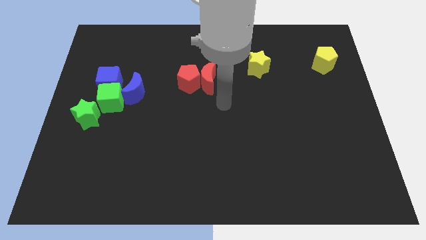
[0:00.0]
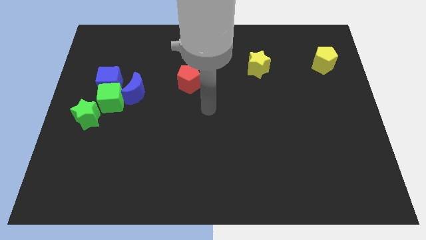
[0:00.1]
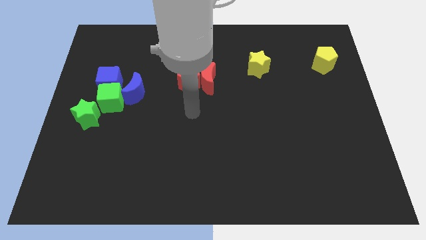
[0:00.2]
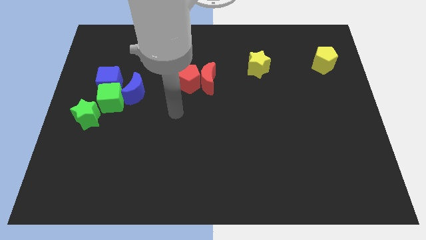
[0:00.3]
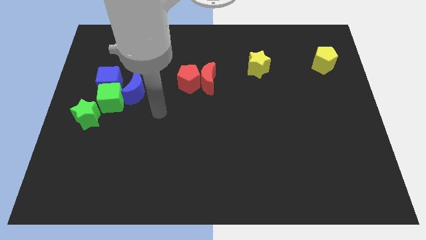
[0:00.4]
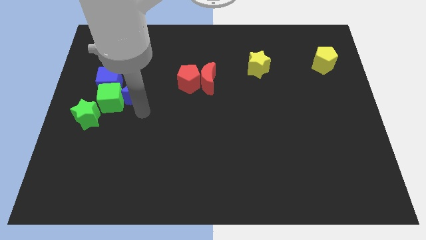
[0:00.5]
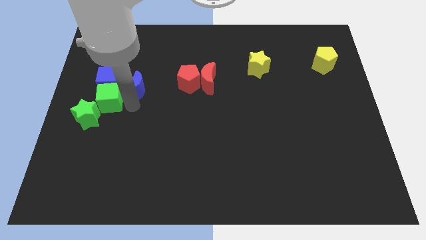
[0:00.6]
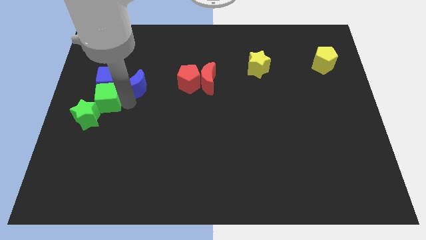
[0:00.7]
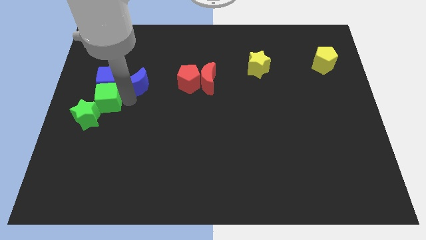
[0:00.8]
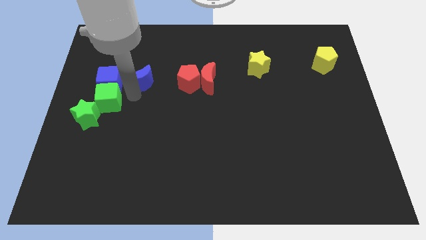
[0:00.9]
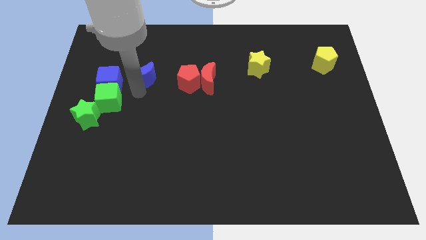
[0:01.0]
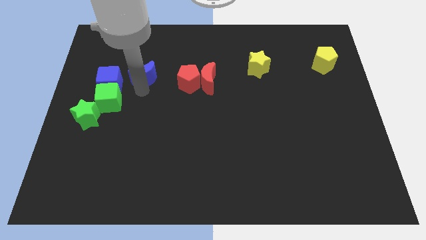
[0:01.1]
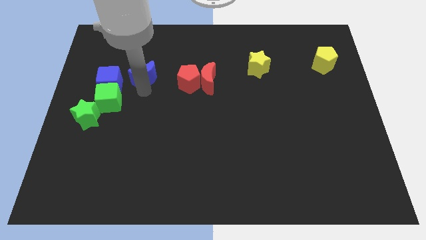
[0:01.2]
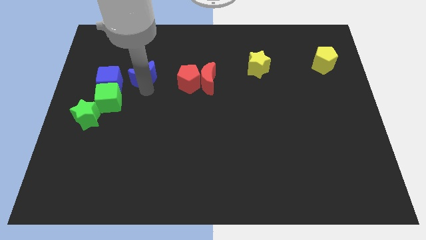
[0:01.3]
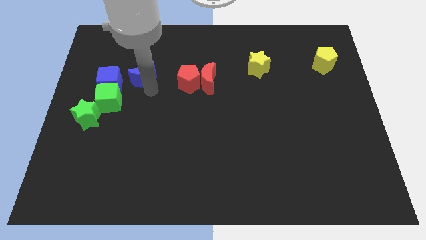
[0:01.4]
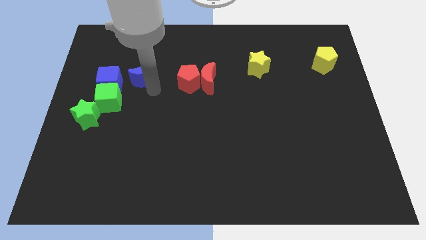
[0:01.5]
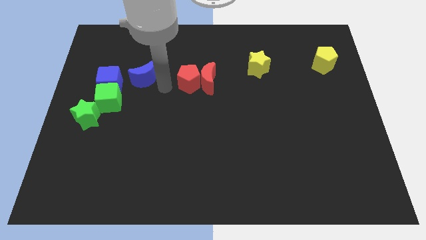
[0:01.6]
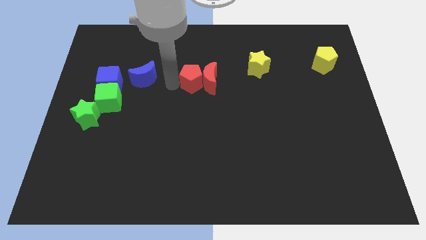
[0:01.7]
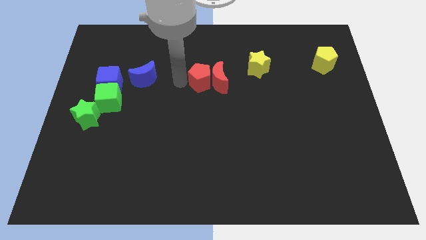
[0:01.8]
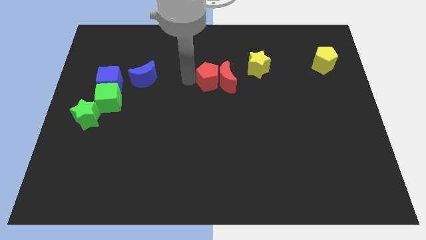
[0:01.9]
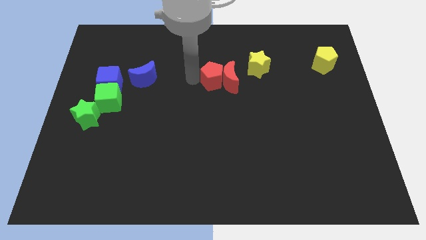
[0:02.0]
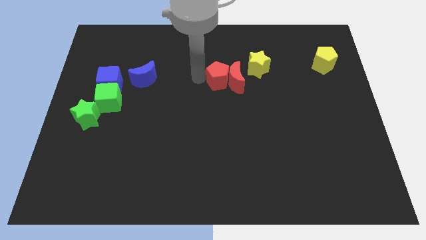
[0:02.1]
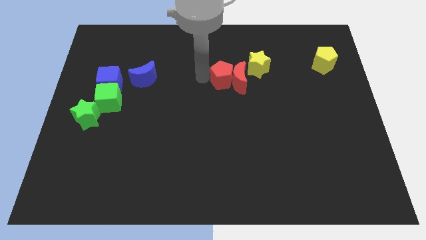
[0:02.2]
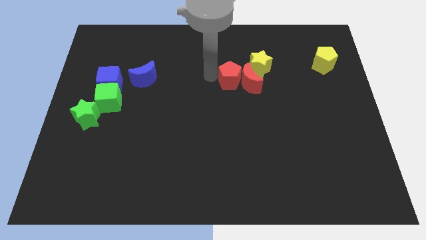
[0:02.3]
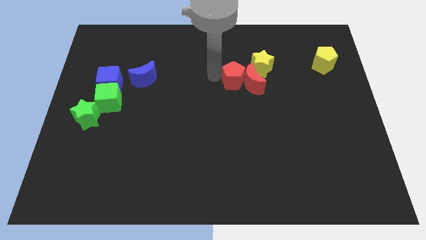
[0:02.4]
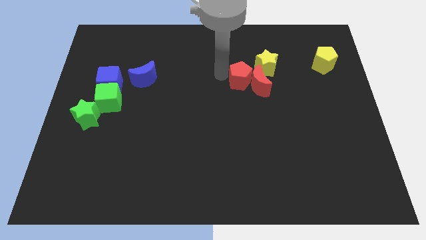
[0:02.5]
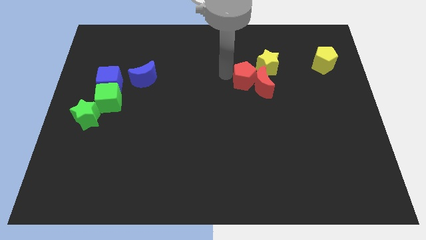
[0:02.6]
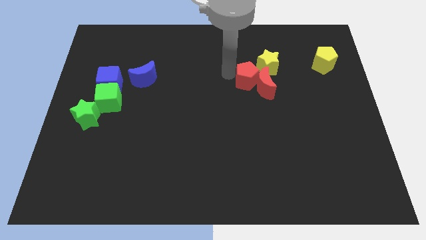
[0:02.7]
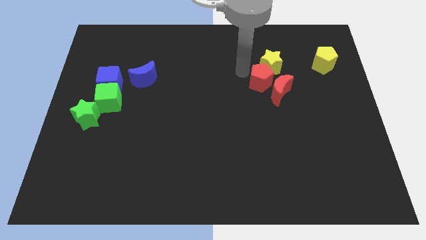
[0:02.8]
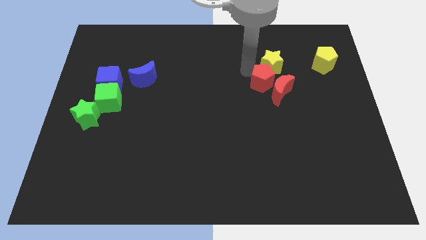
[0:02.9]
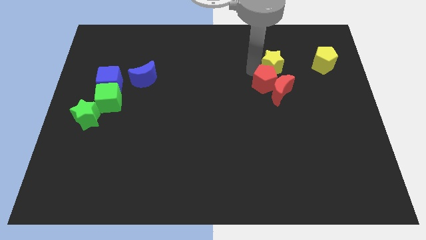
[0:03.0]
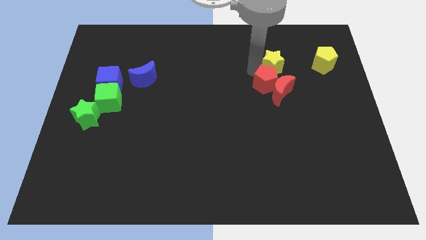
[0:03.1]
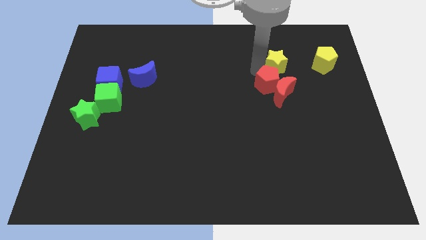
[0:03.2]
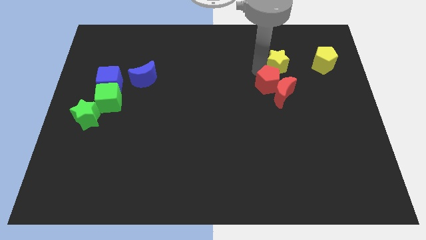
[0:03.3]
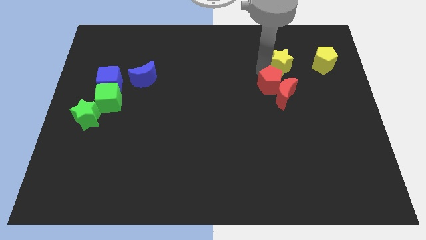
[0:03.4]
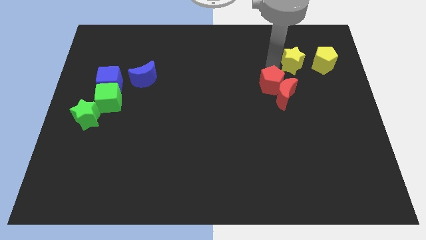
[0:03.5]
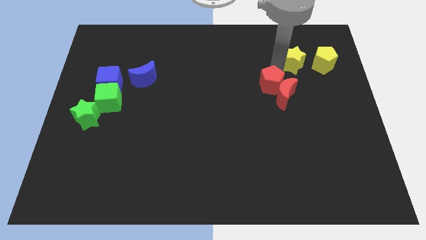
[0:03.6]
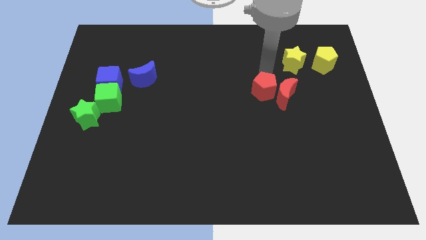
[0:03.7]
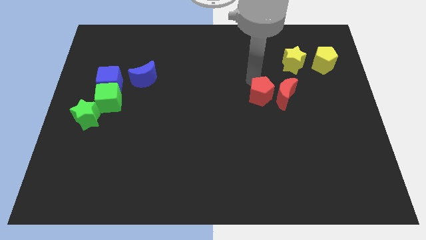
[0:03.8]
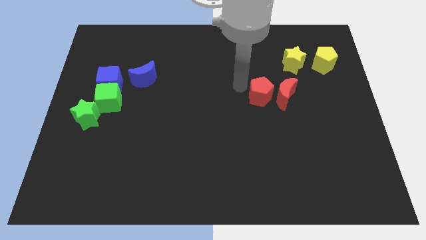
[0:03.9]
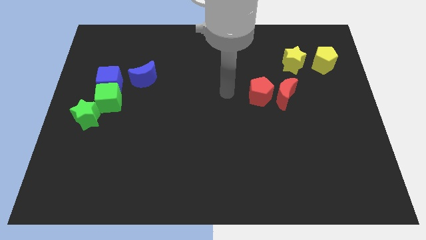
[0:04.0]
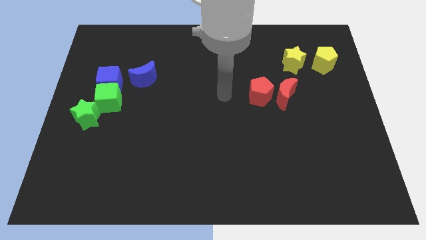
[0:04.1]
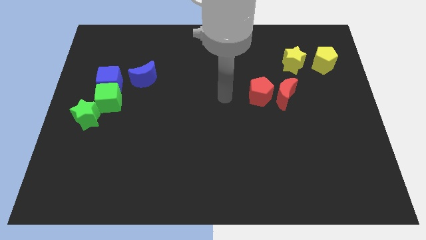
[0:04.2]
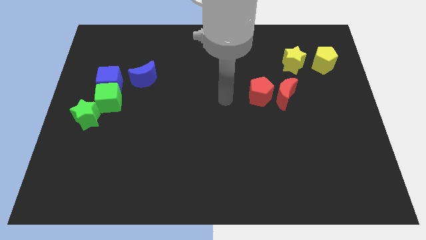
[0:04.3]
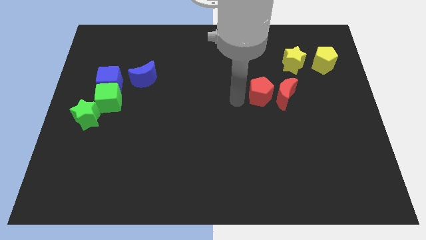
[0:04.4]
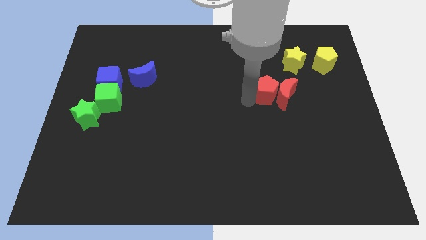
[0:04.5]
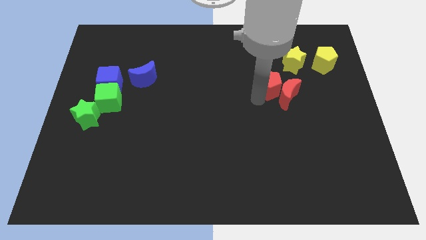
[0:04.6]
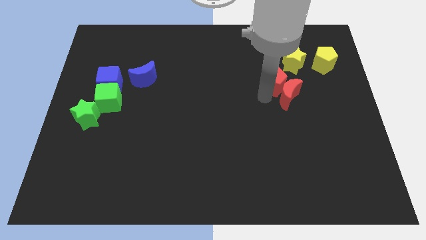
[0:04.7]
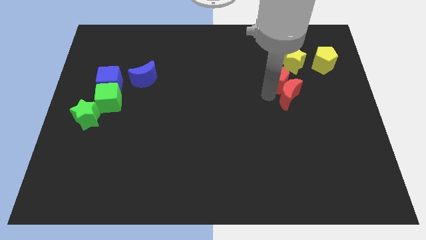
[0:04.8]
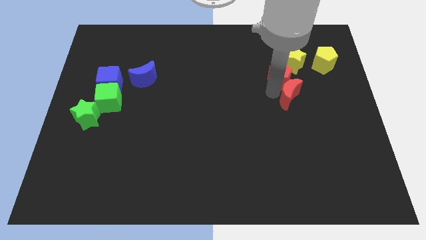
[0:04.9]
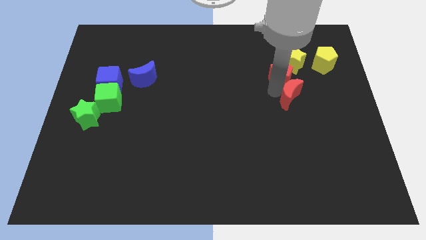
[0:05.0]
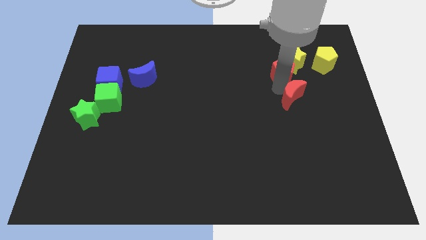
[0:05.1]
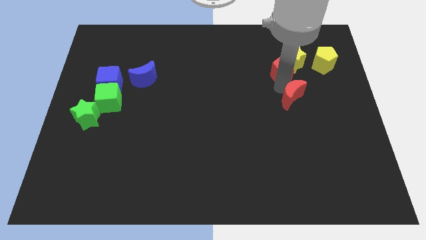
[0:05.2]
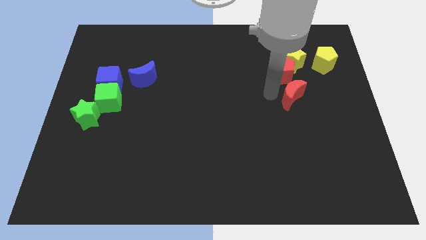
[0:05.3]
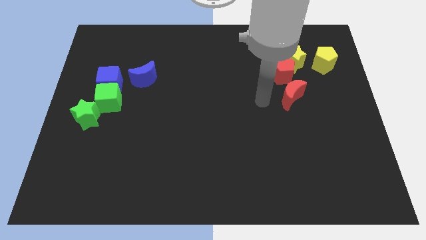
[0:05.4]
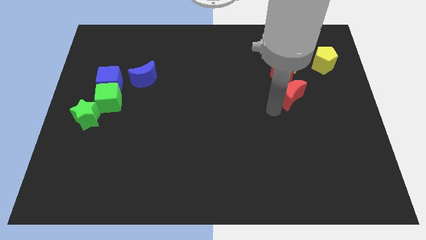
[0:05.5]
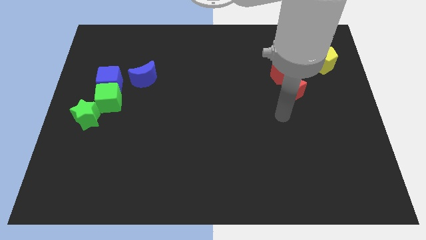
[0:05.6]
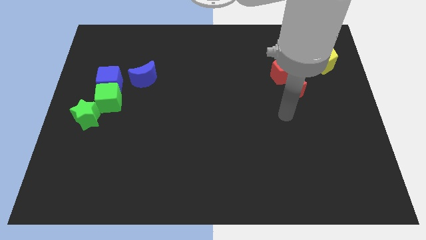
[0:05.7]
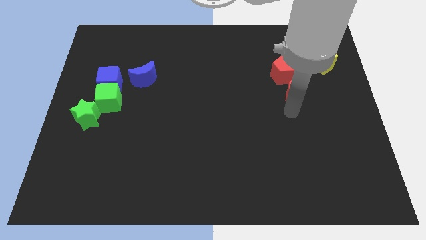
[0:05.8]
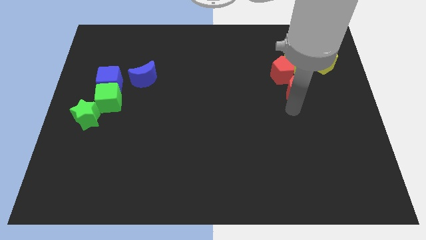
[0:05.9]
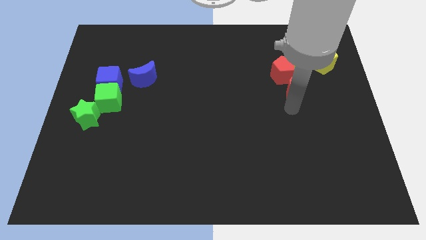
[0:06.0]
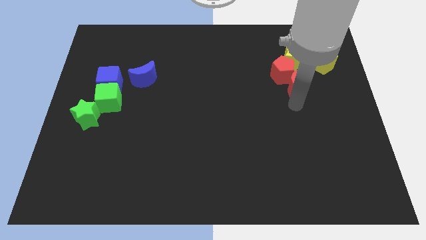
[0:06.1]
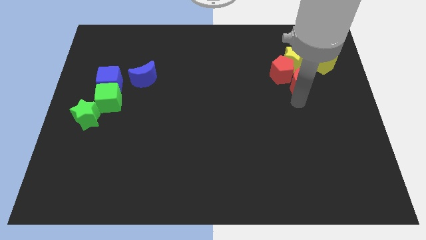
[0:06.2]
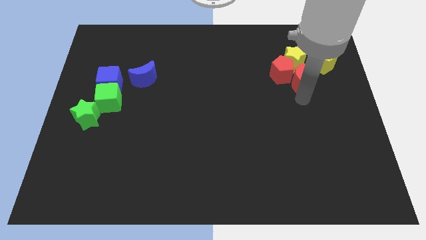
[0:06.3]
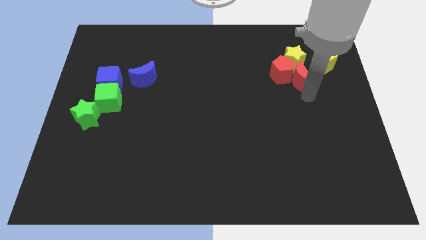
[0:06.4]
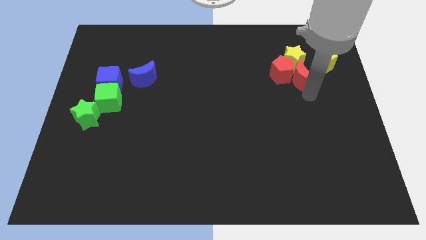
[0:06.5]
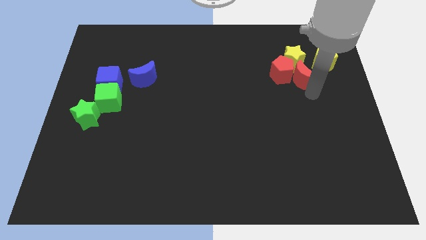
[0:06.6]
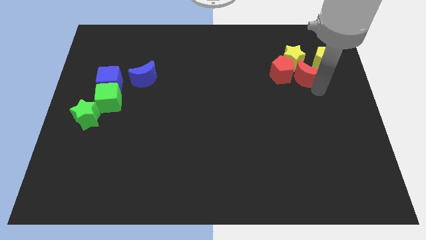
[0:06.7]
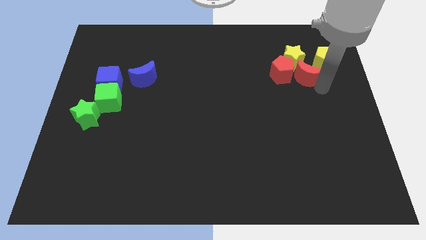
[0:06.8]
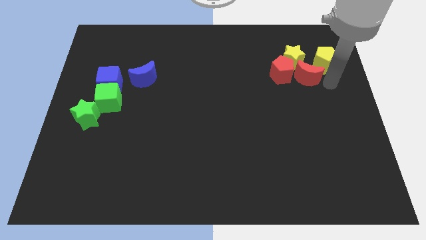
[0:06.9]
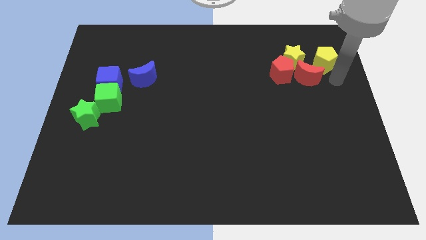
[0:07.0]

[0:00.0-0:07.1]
group up the red blocks with the yellow blocks at the top right side of the table

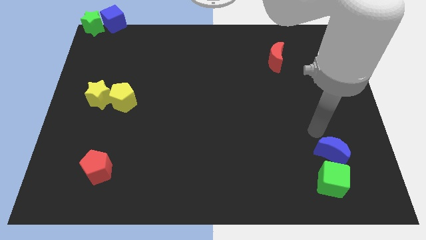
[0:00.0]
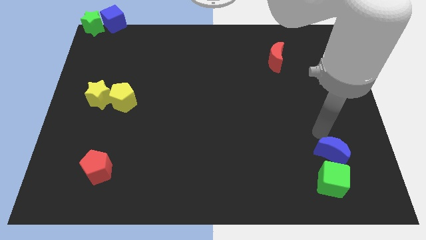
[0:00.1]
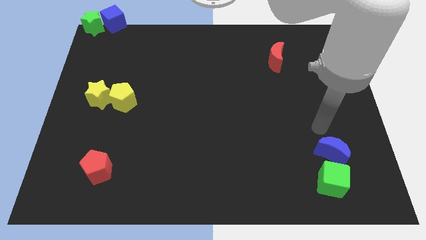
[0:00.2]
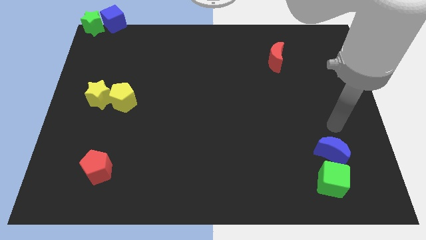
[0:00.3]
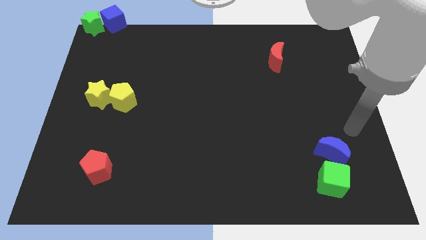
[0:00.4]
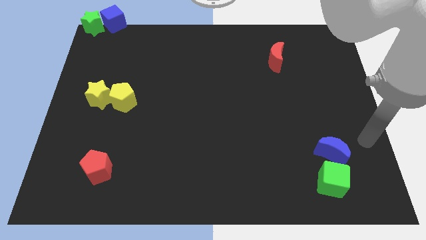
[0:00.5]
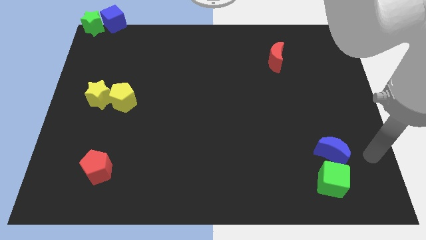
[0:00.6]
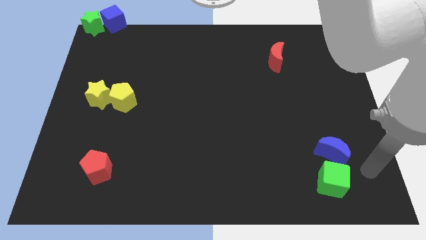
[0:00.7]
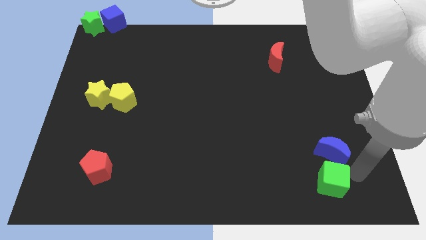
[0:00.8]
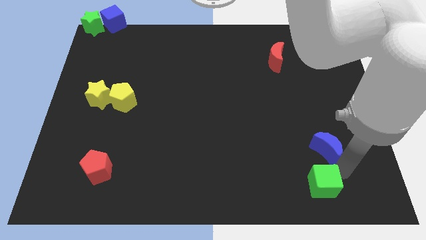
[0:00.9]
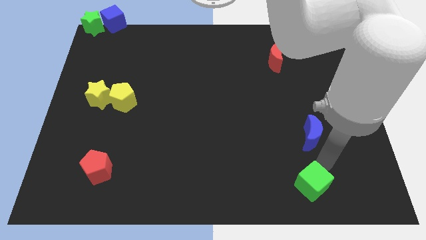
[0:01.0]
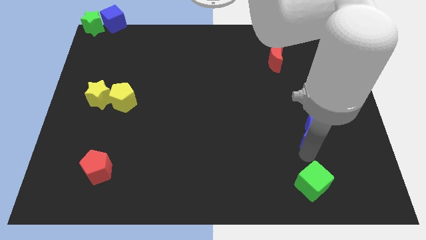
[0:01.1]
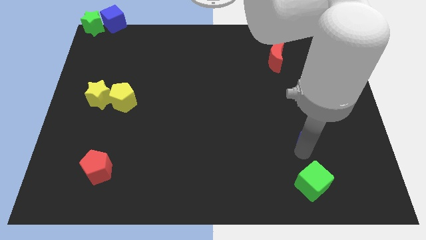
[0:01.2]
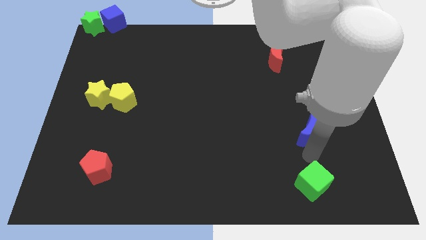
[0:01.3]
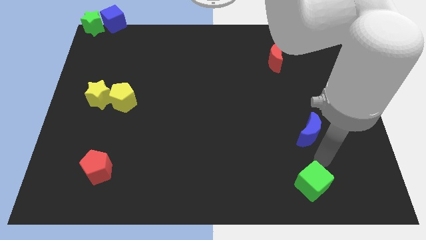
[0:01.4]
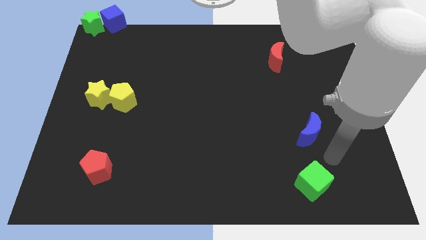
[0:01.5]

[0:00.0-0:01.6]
separate the green cube and blue crescent

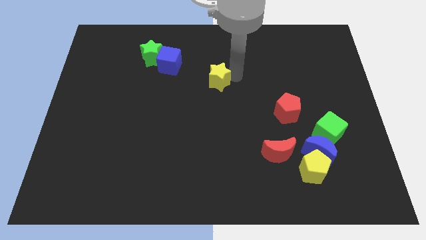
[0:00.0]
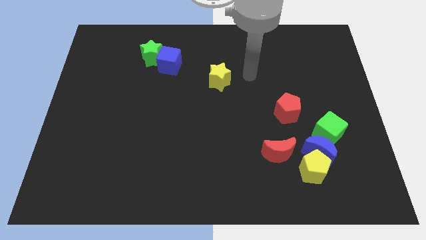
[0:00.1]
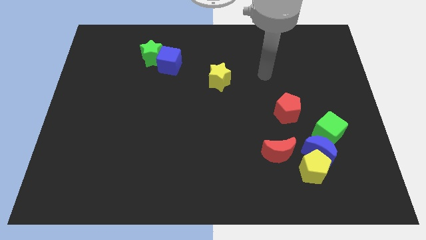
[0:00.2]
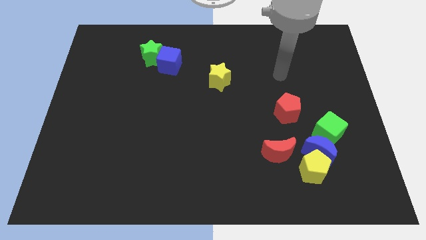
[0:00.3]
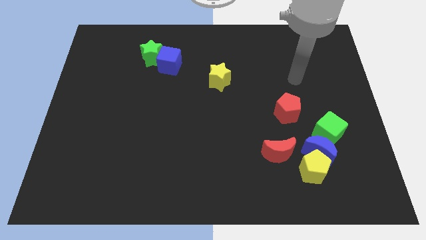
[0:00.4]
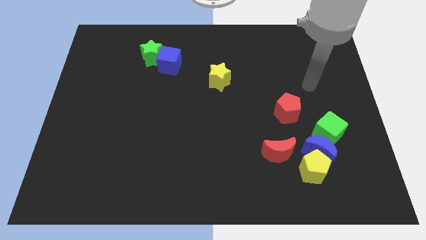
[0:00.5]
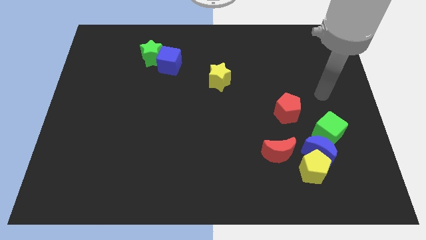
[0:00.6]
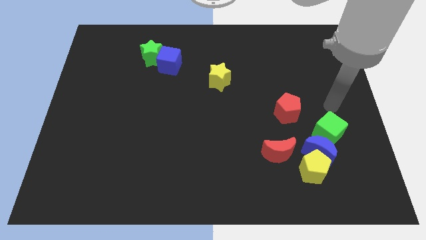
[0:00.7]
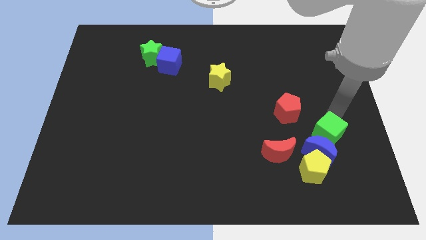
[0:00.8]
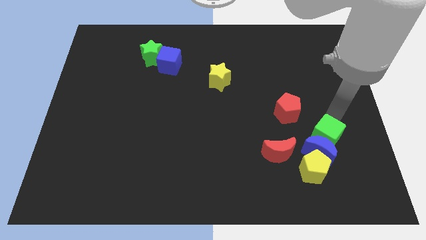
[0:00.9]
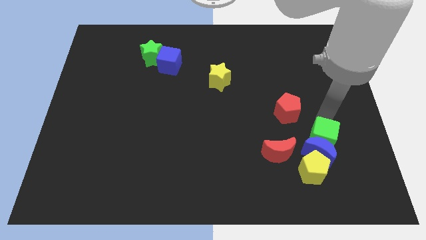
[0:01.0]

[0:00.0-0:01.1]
touch the green cube
